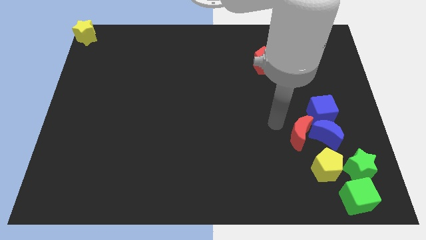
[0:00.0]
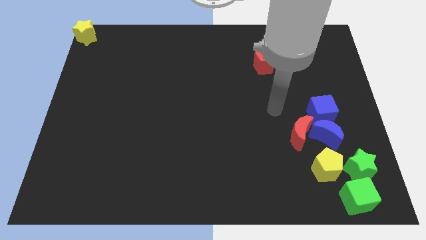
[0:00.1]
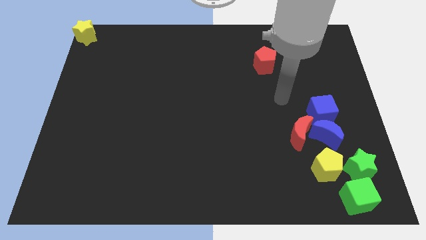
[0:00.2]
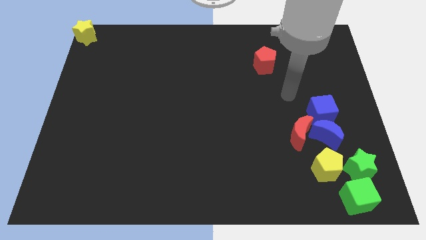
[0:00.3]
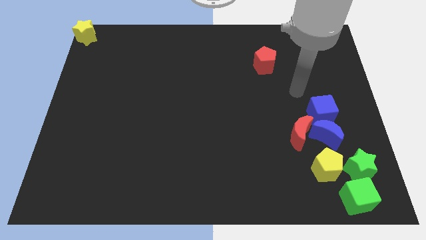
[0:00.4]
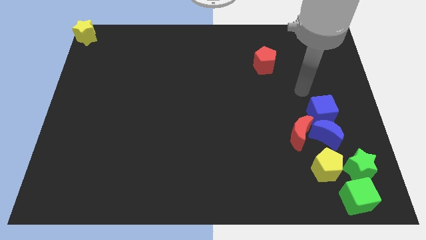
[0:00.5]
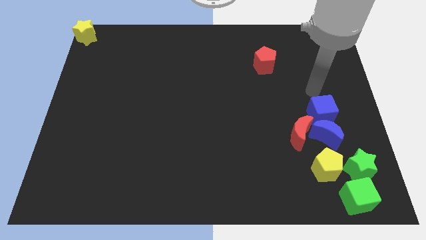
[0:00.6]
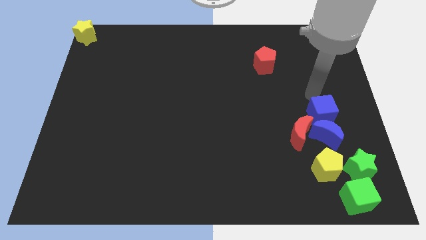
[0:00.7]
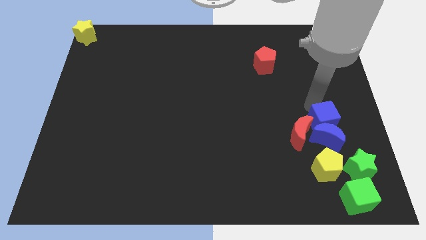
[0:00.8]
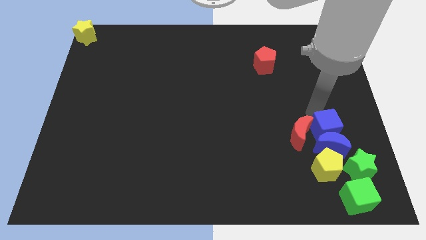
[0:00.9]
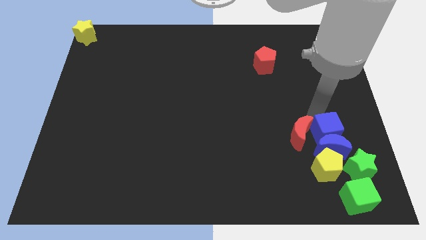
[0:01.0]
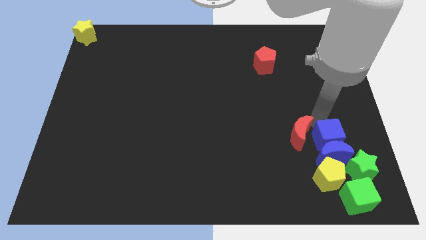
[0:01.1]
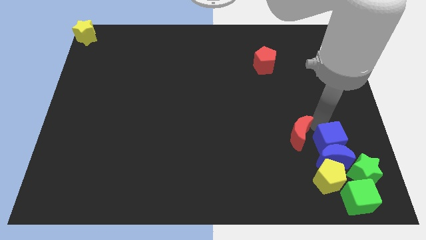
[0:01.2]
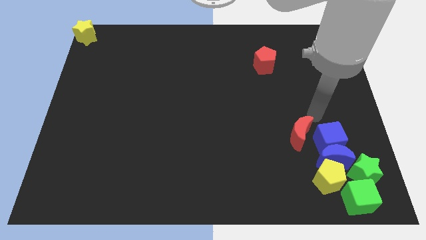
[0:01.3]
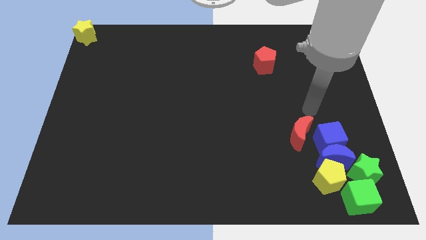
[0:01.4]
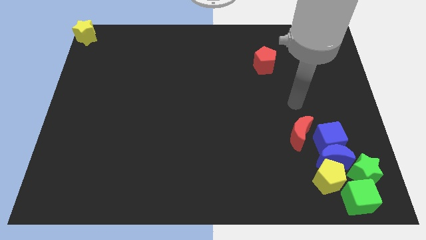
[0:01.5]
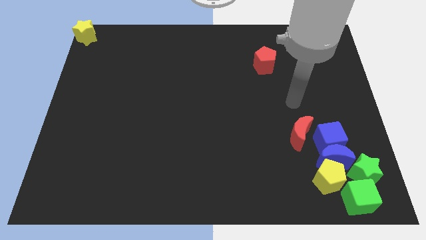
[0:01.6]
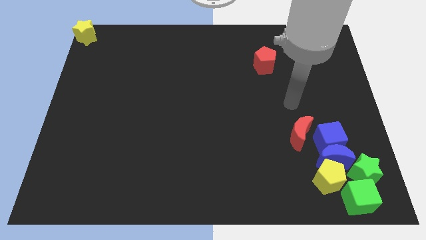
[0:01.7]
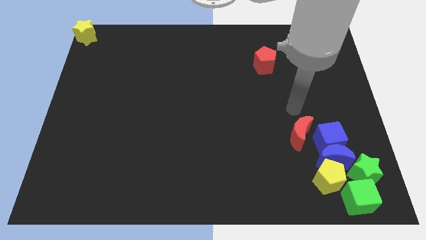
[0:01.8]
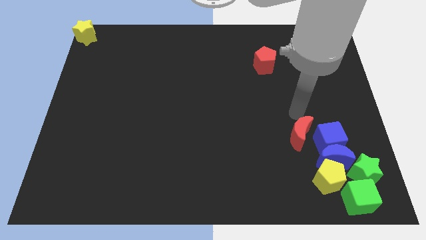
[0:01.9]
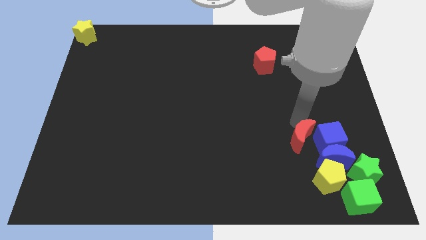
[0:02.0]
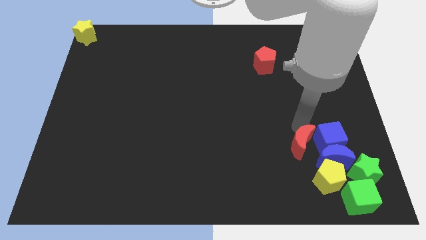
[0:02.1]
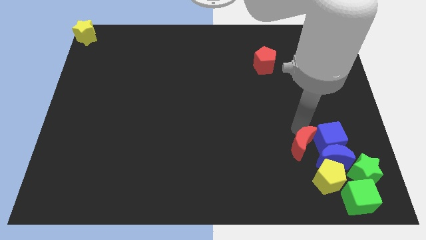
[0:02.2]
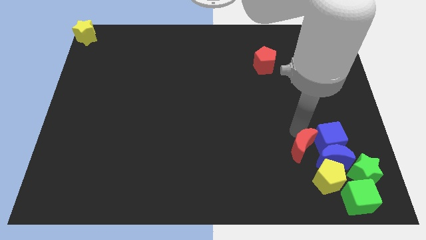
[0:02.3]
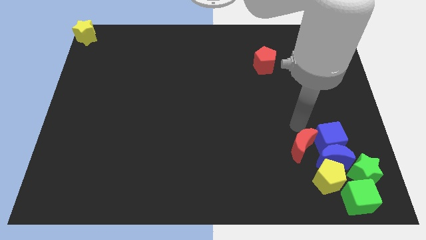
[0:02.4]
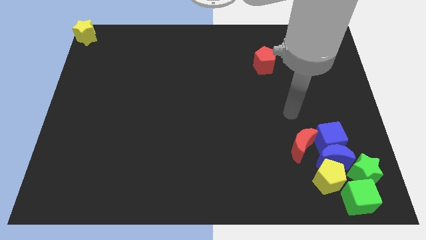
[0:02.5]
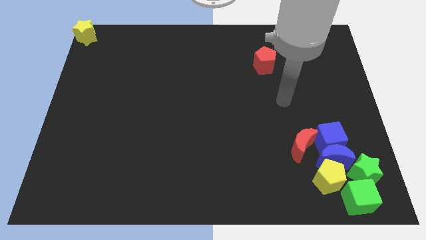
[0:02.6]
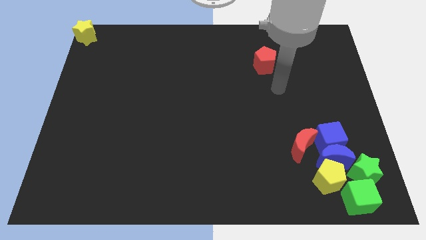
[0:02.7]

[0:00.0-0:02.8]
push the blue cube and red moon downwards slightly

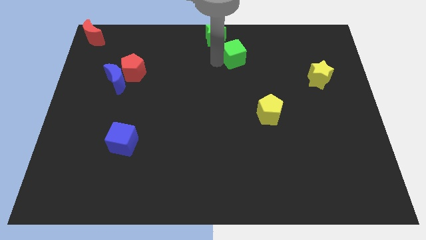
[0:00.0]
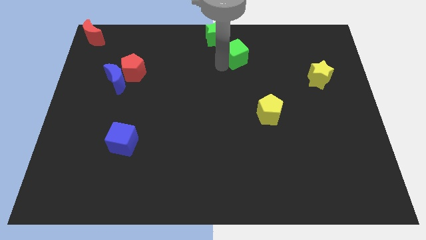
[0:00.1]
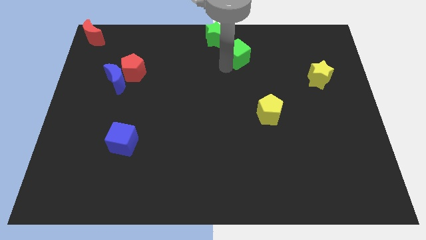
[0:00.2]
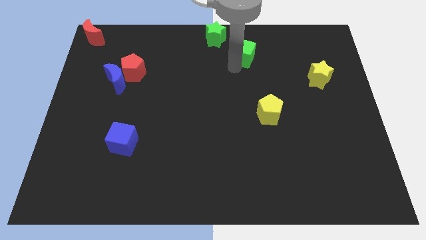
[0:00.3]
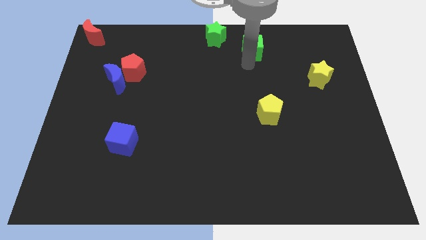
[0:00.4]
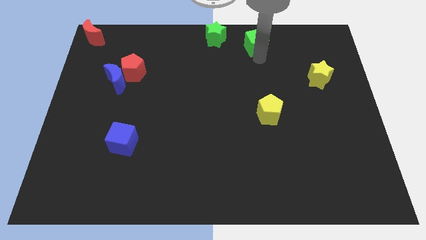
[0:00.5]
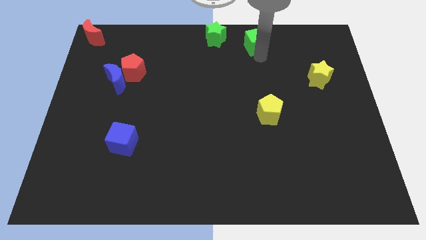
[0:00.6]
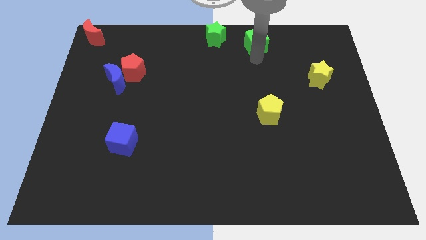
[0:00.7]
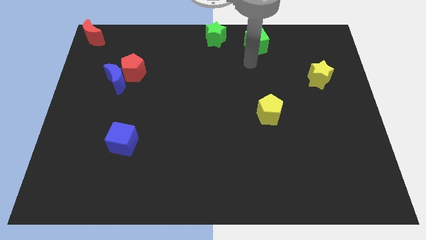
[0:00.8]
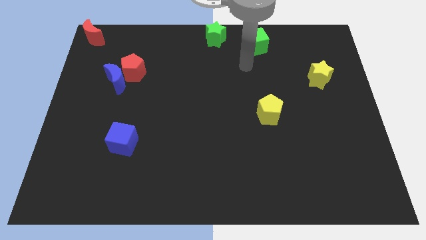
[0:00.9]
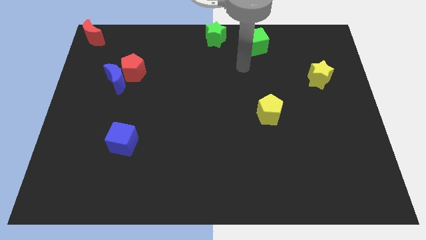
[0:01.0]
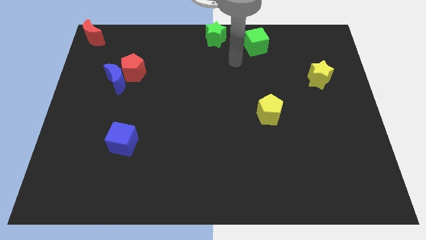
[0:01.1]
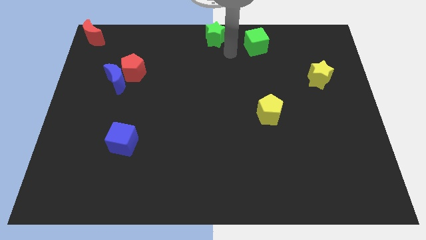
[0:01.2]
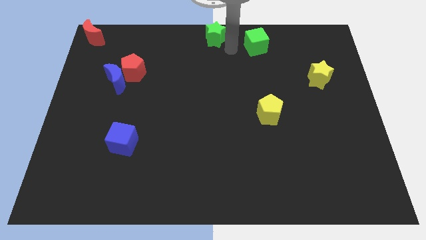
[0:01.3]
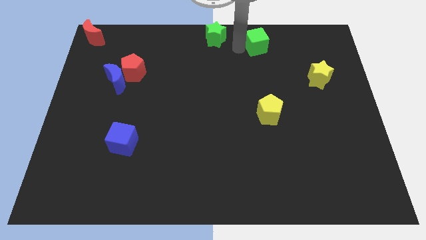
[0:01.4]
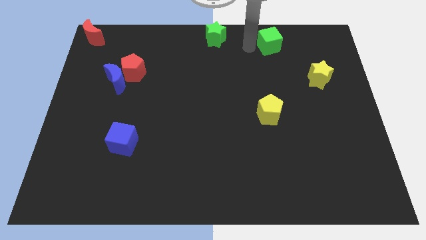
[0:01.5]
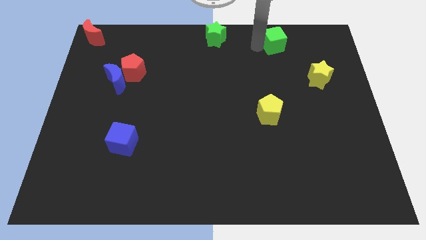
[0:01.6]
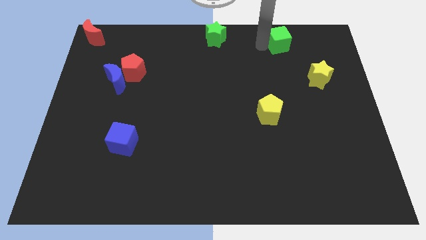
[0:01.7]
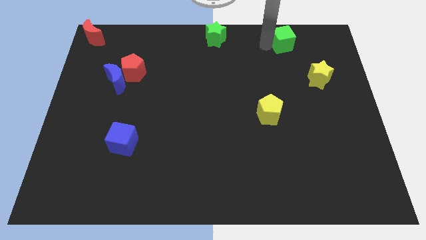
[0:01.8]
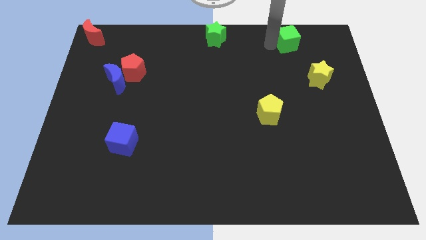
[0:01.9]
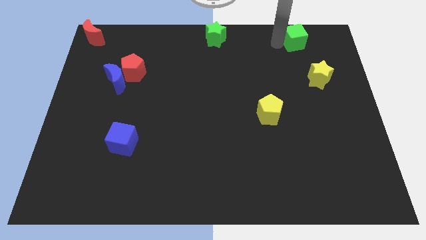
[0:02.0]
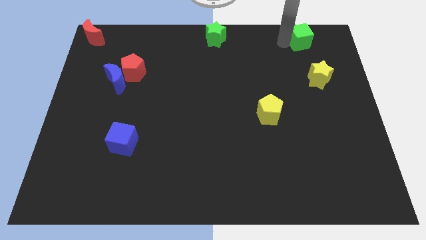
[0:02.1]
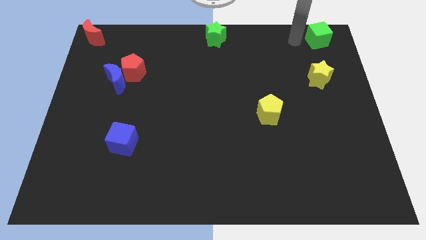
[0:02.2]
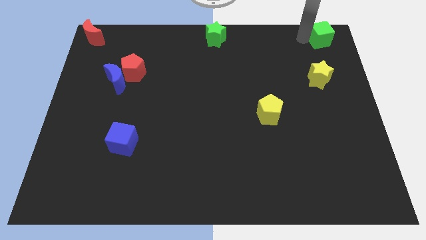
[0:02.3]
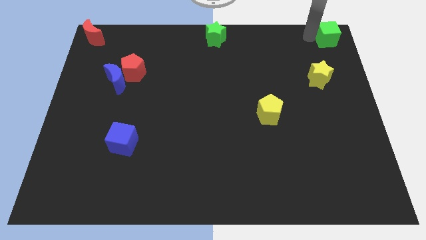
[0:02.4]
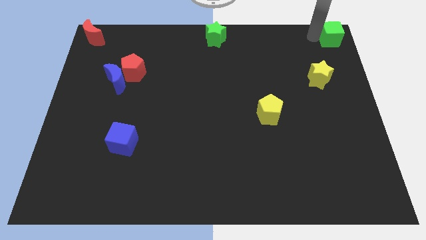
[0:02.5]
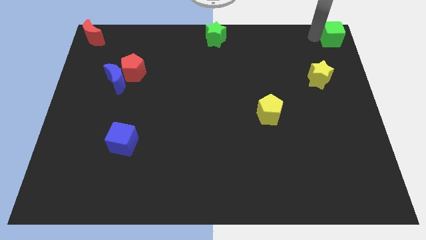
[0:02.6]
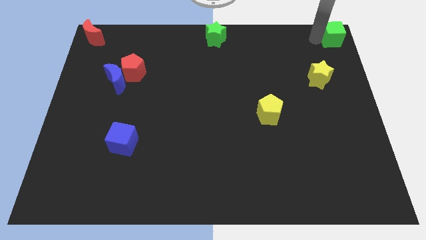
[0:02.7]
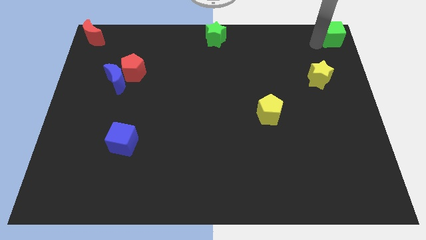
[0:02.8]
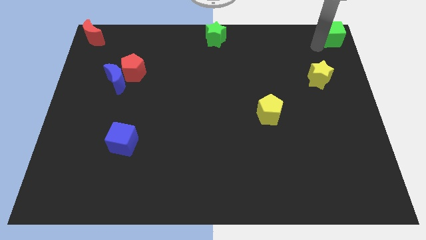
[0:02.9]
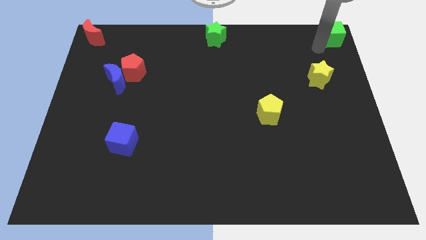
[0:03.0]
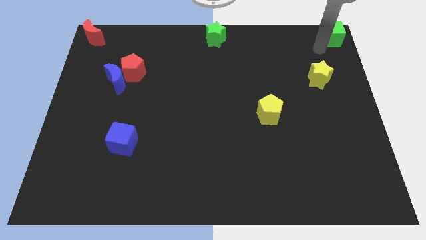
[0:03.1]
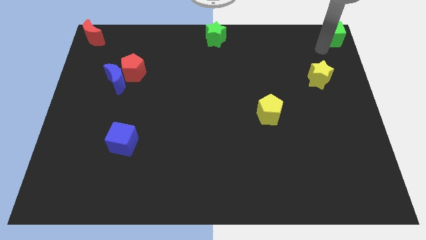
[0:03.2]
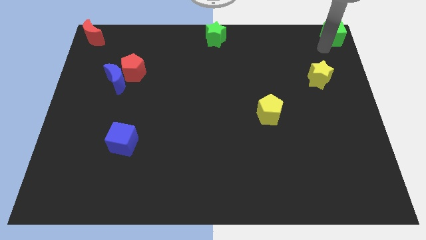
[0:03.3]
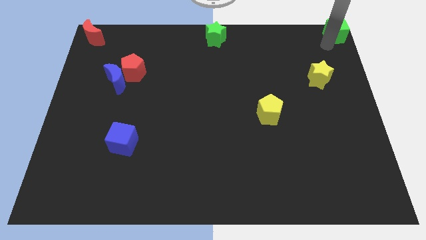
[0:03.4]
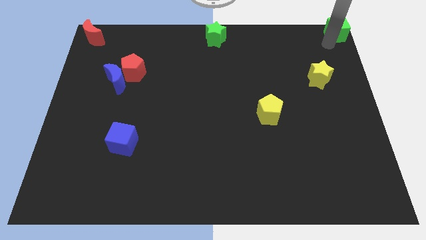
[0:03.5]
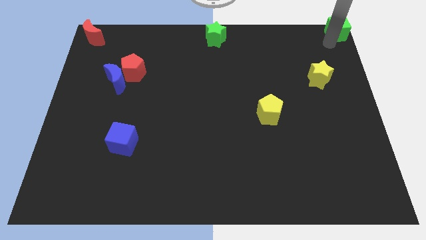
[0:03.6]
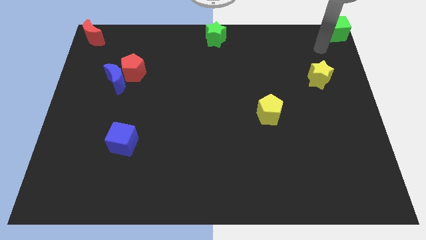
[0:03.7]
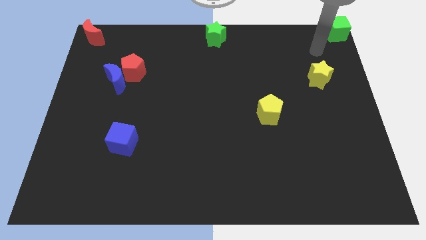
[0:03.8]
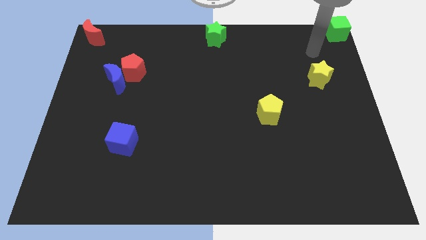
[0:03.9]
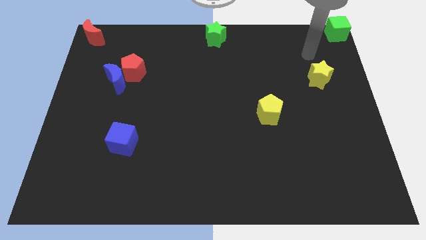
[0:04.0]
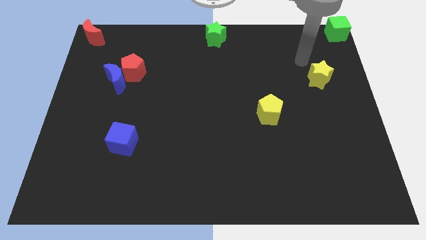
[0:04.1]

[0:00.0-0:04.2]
move the green cube to the top right corner of the board

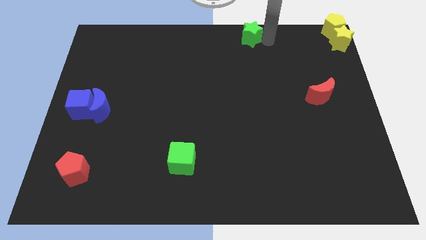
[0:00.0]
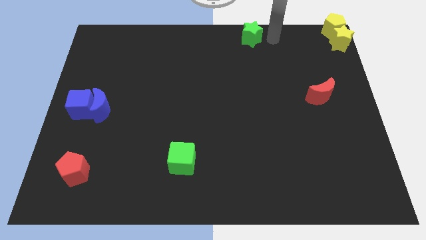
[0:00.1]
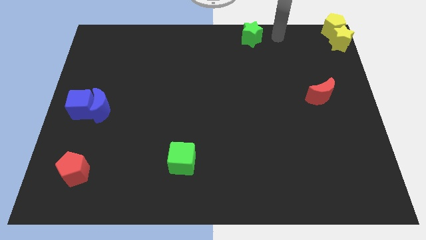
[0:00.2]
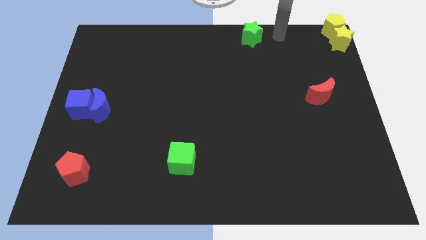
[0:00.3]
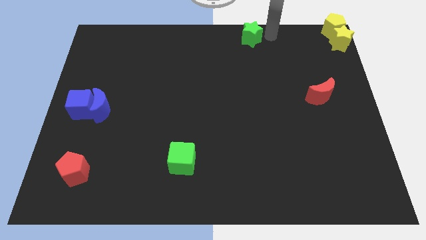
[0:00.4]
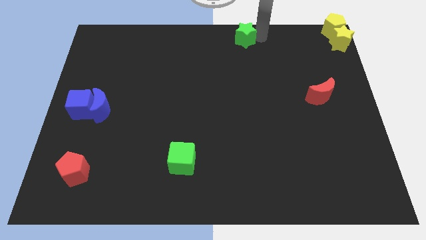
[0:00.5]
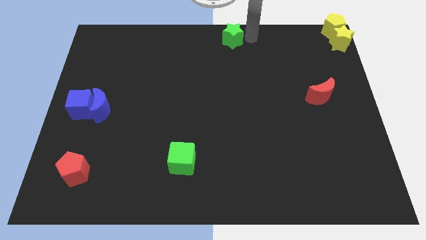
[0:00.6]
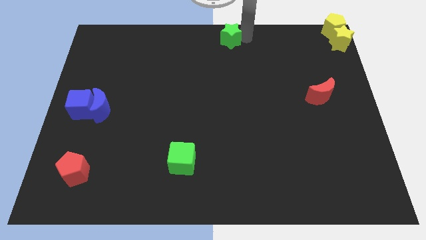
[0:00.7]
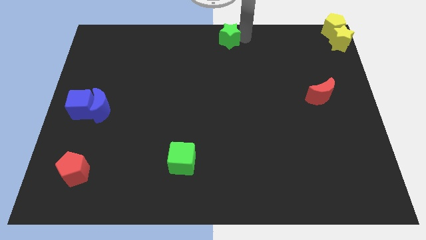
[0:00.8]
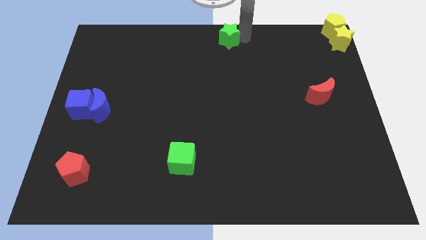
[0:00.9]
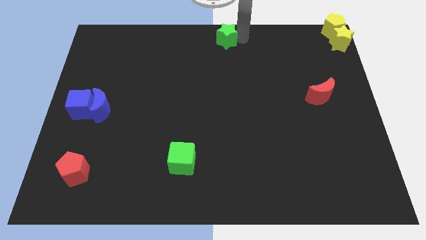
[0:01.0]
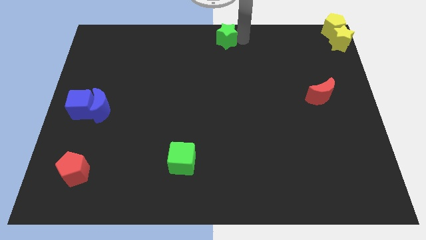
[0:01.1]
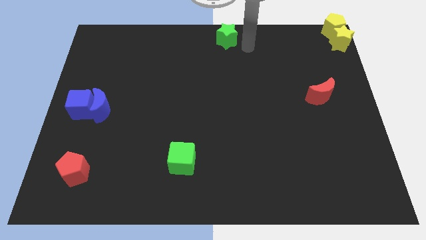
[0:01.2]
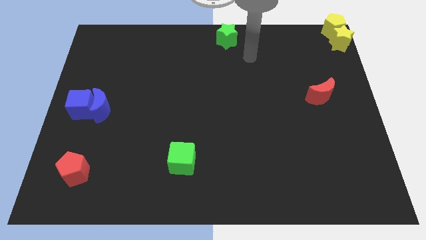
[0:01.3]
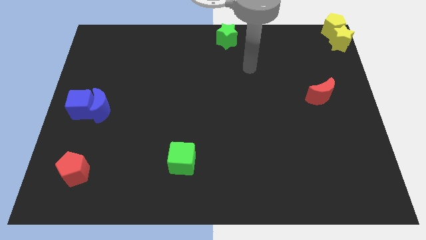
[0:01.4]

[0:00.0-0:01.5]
move the green star to the top center of the board

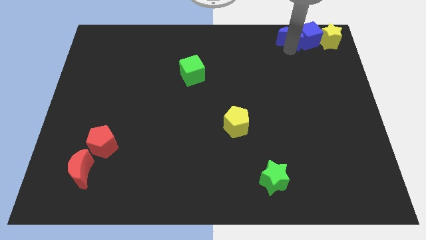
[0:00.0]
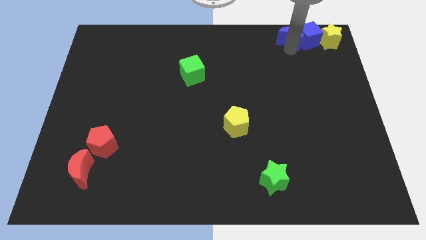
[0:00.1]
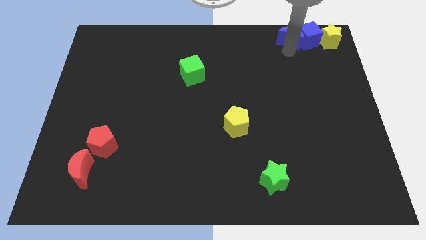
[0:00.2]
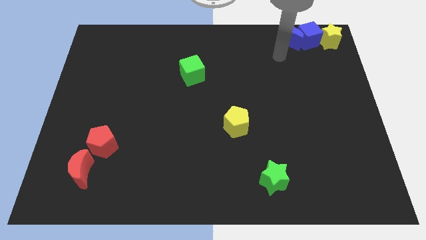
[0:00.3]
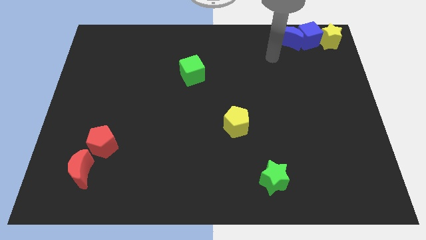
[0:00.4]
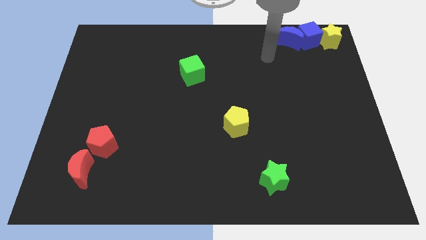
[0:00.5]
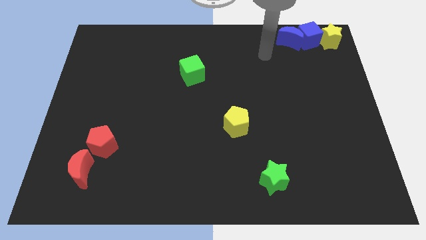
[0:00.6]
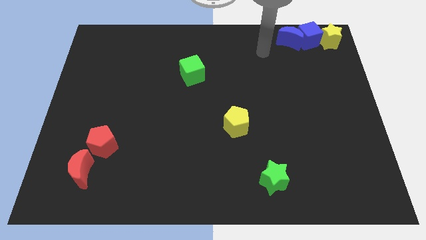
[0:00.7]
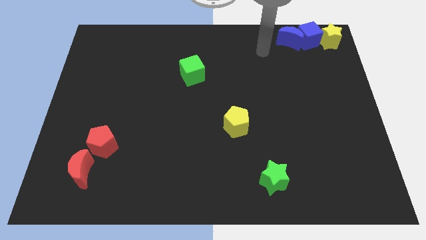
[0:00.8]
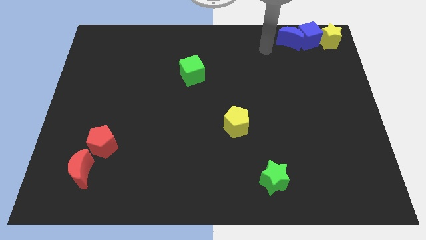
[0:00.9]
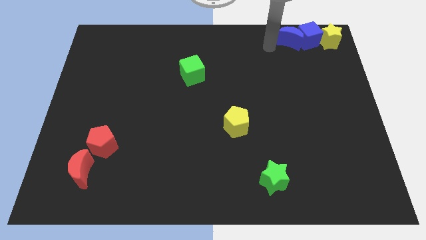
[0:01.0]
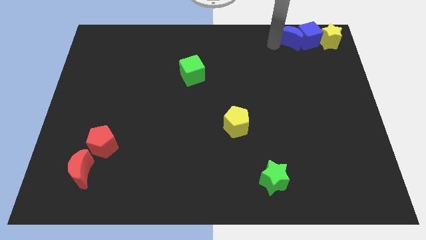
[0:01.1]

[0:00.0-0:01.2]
move your arm slightly to the blue crescent
